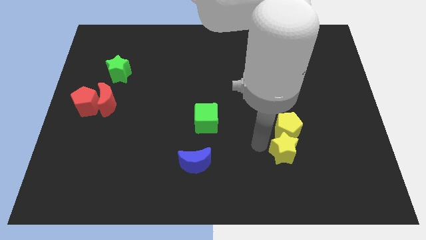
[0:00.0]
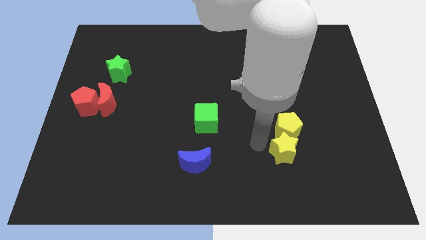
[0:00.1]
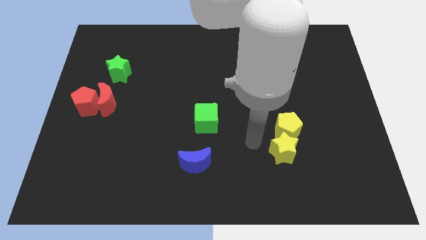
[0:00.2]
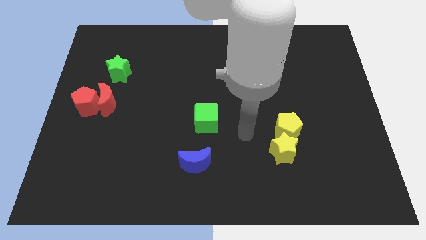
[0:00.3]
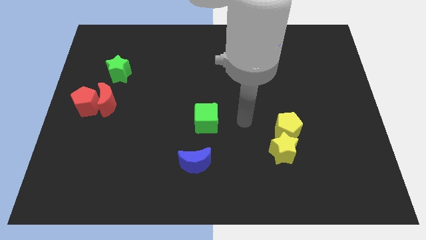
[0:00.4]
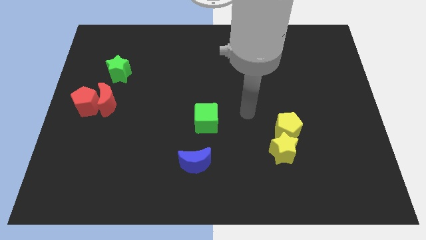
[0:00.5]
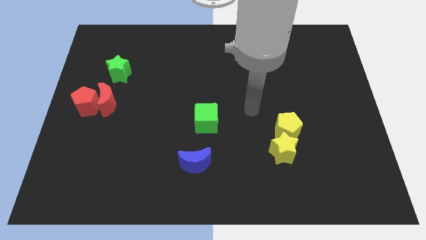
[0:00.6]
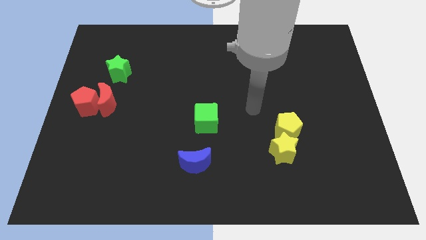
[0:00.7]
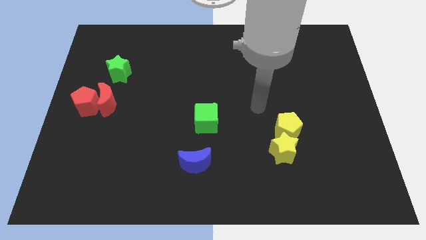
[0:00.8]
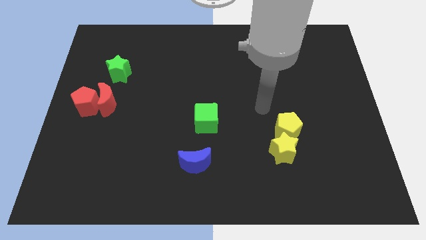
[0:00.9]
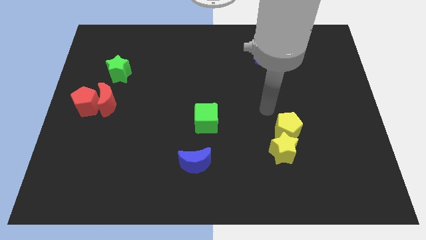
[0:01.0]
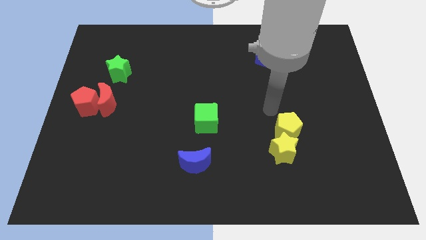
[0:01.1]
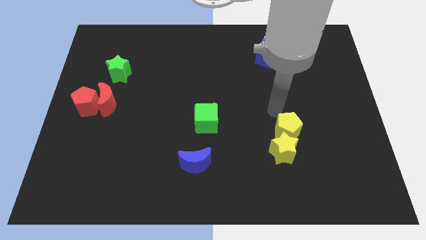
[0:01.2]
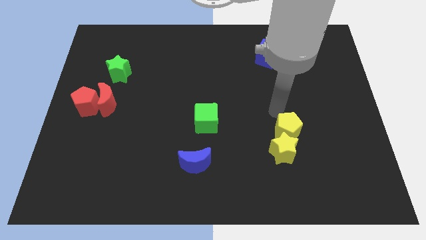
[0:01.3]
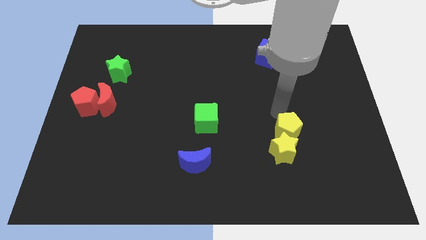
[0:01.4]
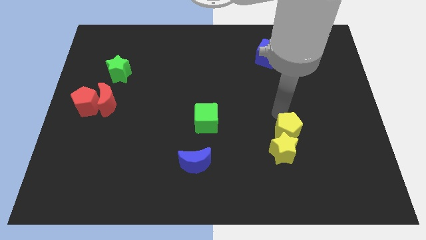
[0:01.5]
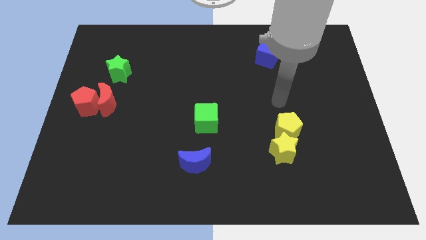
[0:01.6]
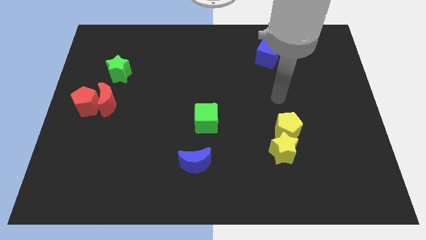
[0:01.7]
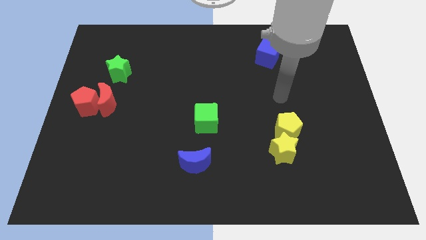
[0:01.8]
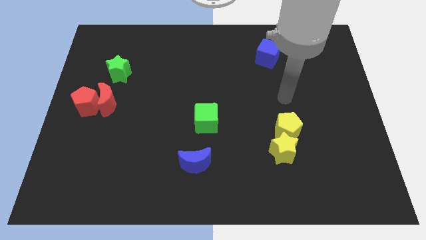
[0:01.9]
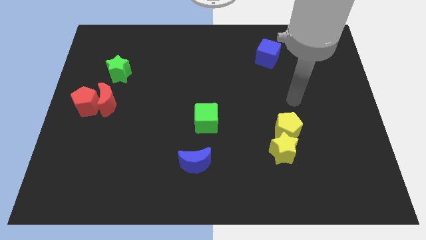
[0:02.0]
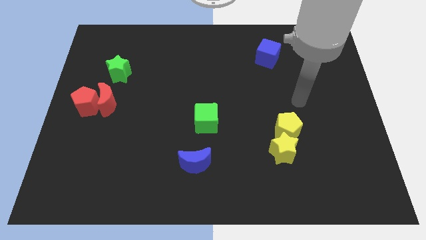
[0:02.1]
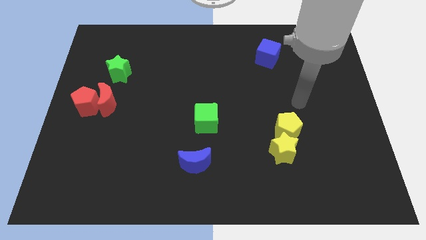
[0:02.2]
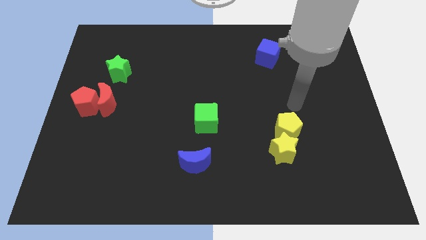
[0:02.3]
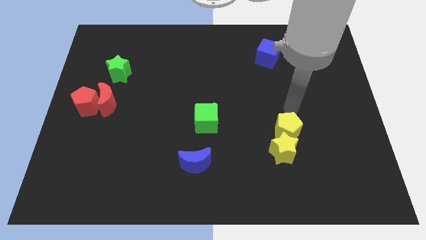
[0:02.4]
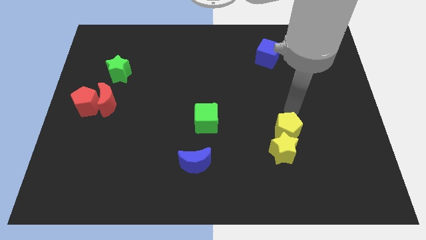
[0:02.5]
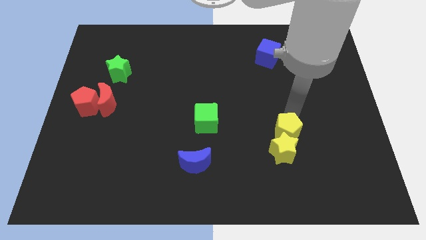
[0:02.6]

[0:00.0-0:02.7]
move your arm above the yellow pentagon

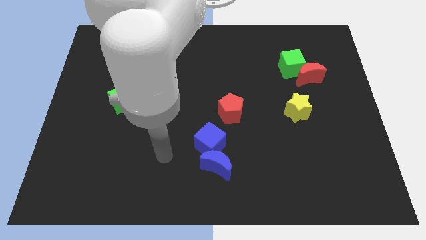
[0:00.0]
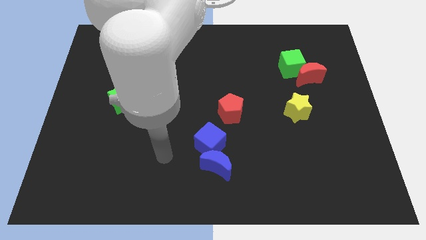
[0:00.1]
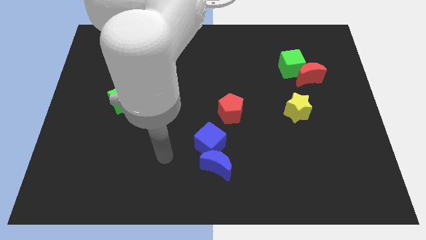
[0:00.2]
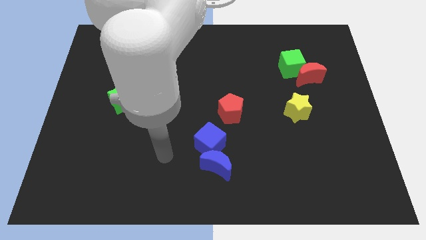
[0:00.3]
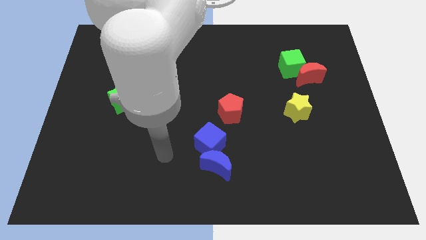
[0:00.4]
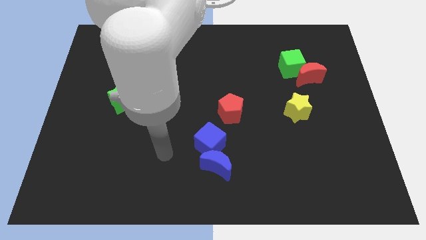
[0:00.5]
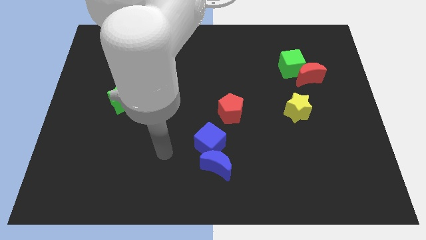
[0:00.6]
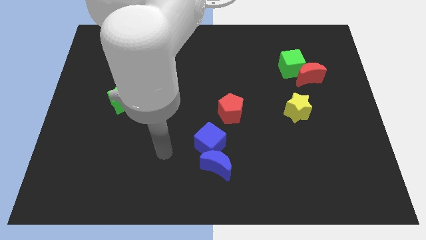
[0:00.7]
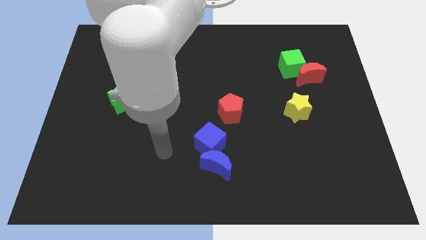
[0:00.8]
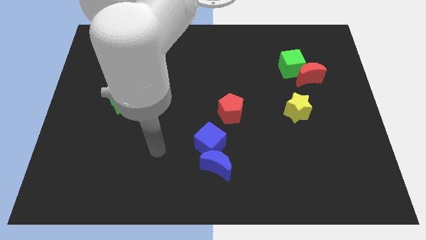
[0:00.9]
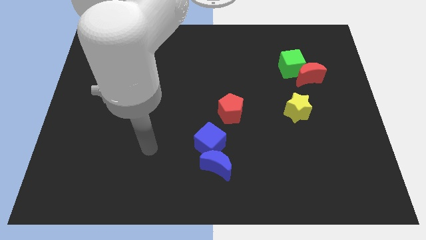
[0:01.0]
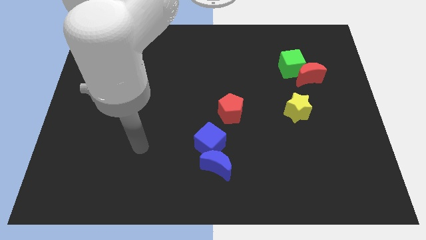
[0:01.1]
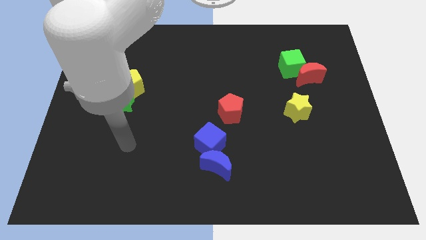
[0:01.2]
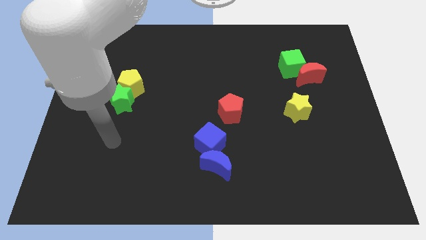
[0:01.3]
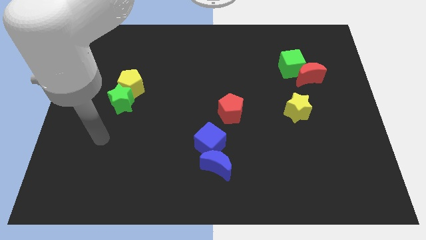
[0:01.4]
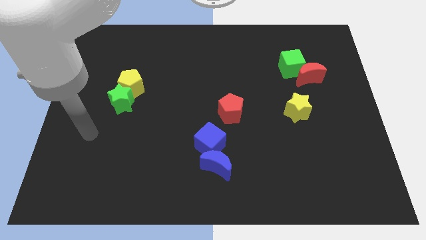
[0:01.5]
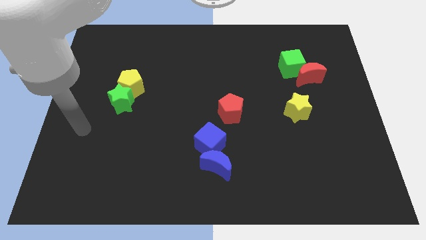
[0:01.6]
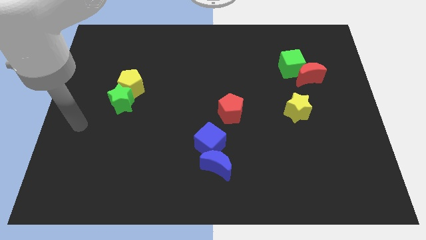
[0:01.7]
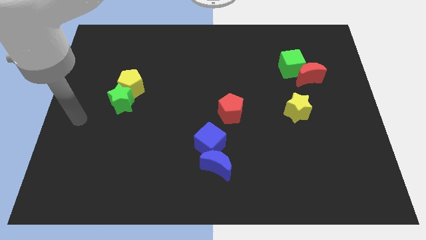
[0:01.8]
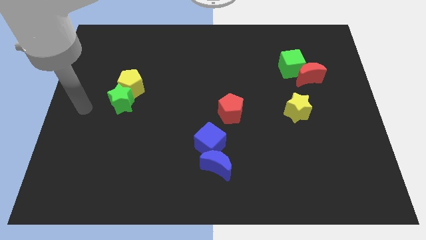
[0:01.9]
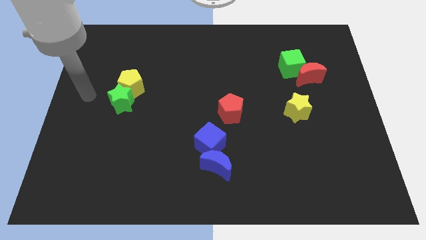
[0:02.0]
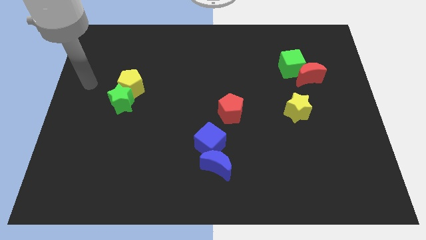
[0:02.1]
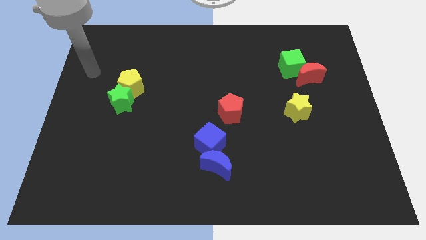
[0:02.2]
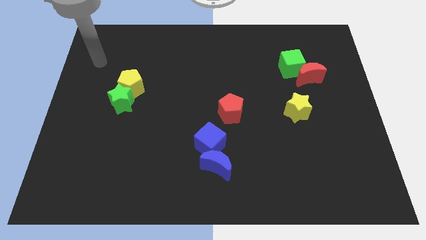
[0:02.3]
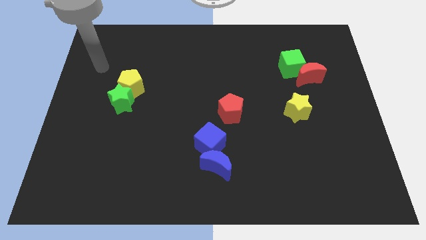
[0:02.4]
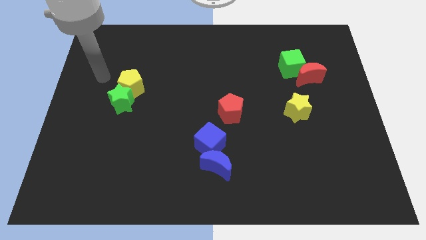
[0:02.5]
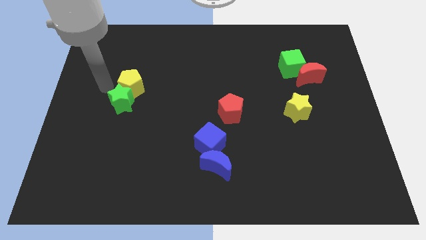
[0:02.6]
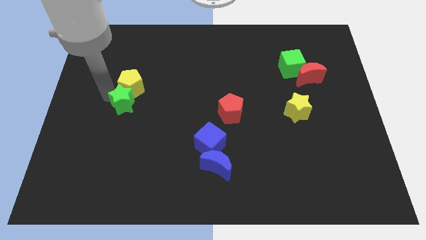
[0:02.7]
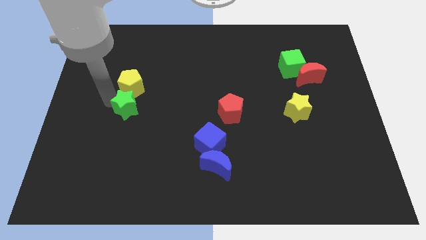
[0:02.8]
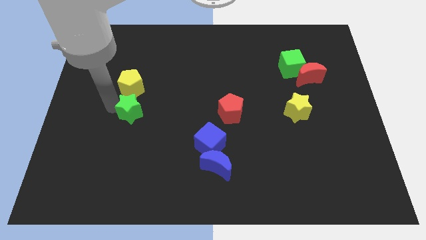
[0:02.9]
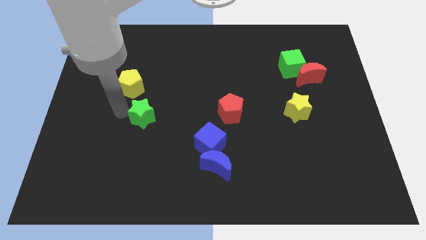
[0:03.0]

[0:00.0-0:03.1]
place the arm to the left of the green star

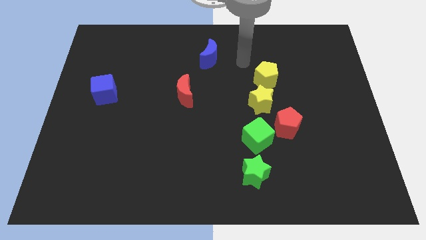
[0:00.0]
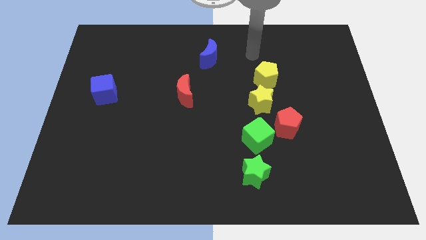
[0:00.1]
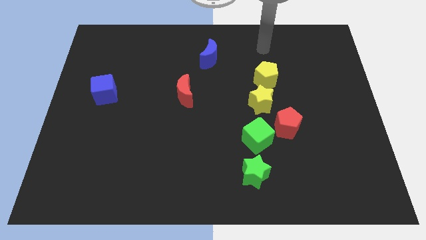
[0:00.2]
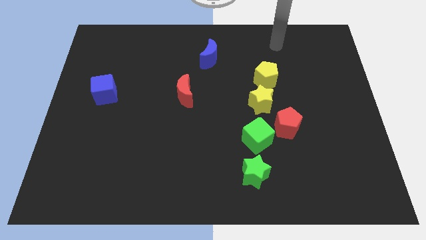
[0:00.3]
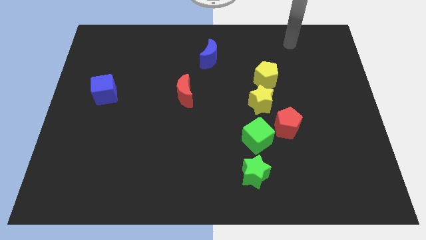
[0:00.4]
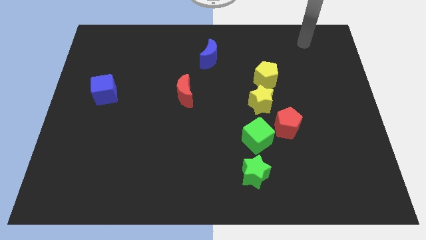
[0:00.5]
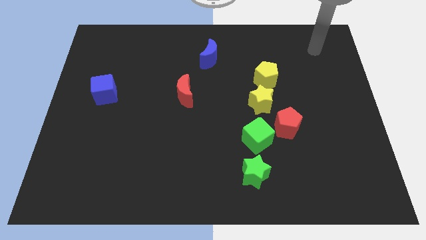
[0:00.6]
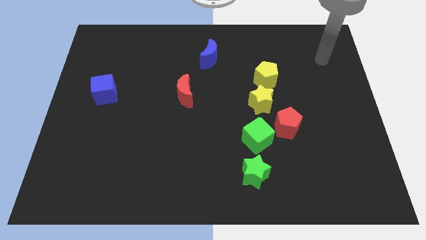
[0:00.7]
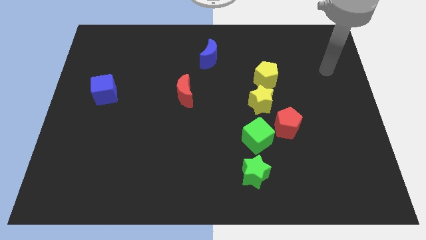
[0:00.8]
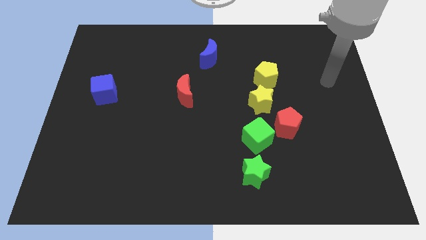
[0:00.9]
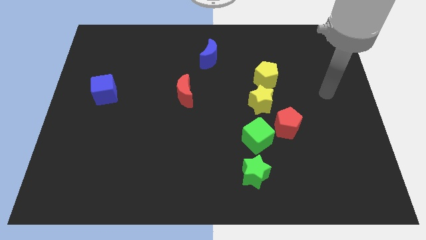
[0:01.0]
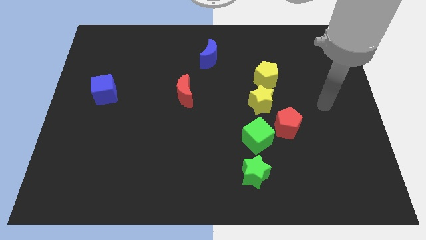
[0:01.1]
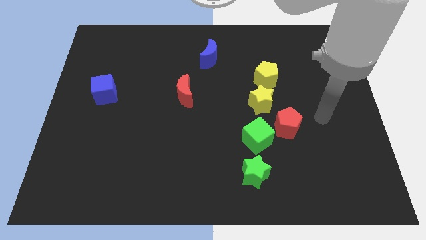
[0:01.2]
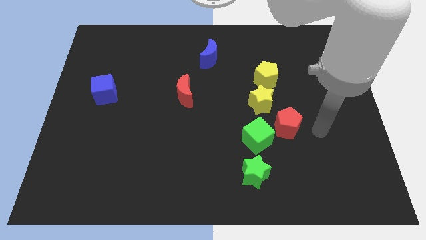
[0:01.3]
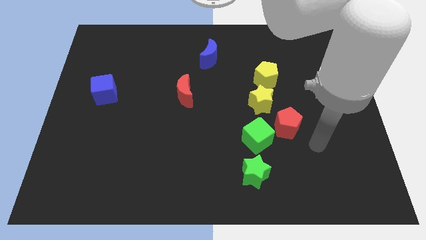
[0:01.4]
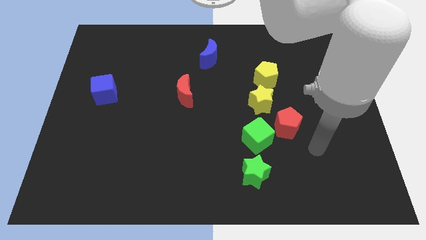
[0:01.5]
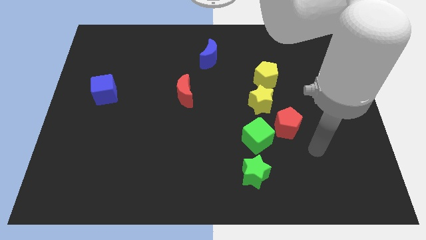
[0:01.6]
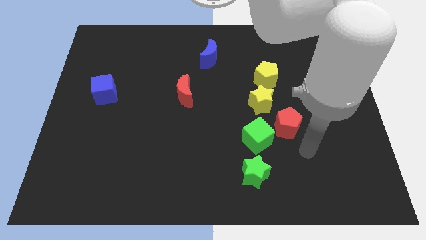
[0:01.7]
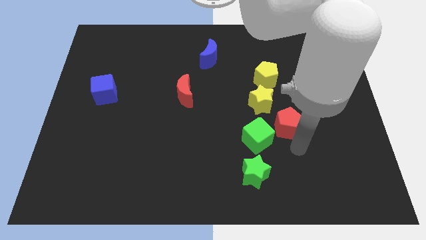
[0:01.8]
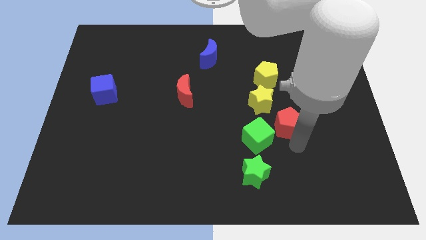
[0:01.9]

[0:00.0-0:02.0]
move your arm below to the red pentagon

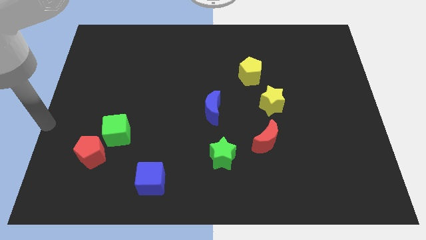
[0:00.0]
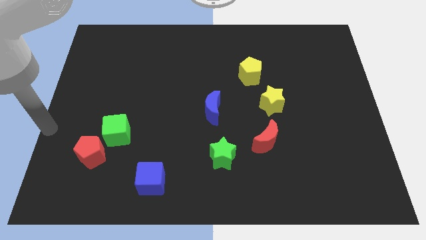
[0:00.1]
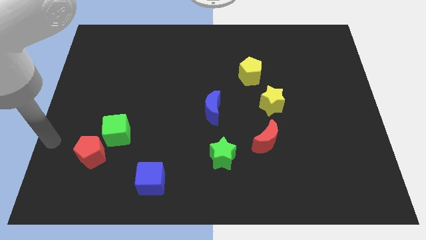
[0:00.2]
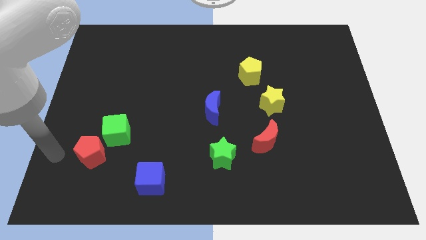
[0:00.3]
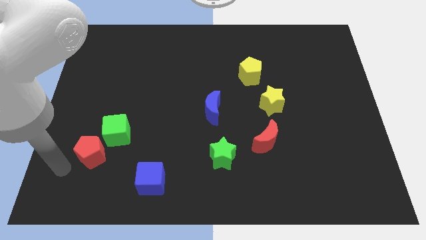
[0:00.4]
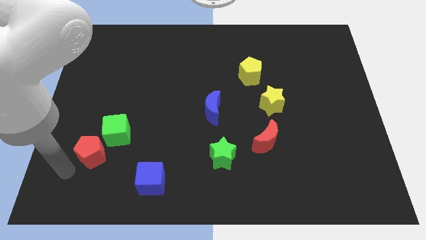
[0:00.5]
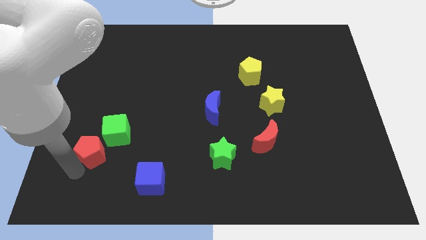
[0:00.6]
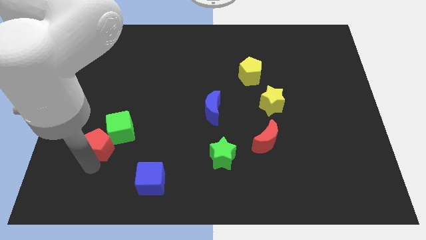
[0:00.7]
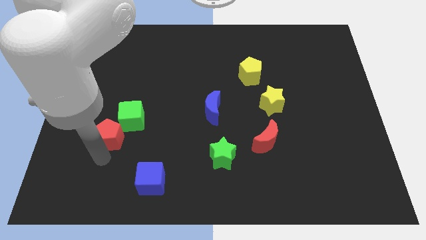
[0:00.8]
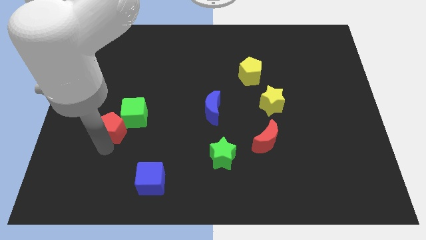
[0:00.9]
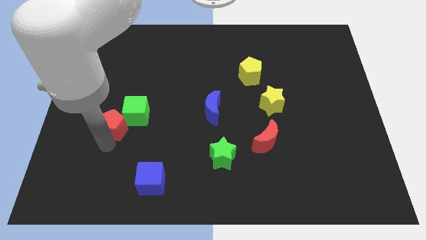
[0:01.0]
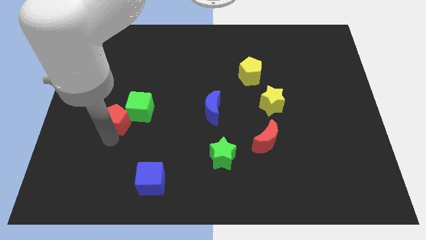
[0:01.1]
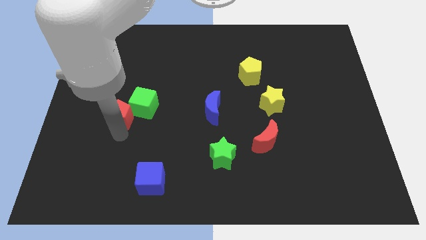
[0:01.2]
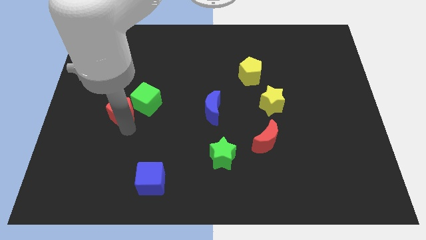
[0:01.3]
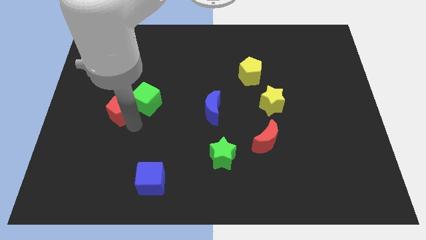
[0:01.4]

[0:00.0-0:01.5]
slide the green cube and red pentagon together to the top right side of the board
